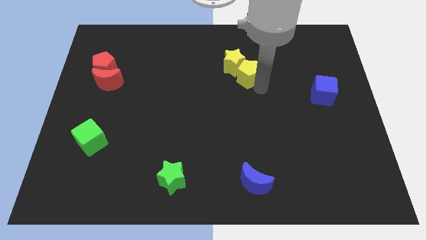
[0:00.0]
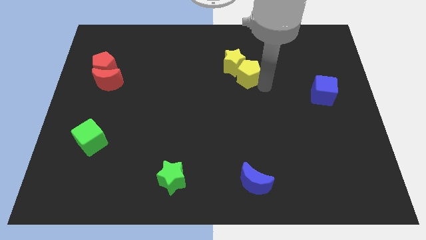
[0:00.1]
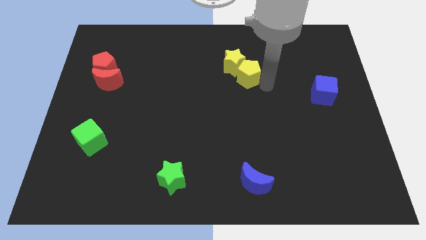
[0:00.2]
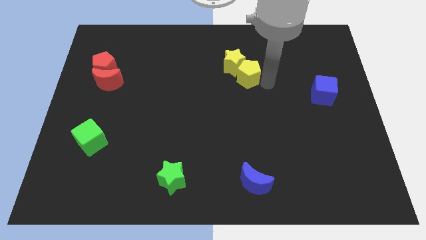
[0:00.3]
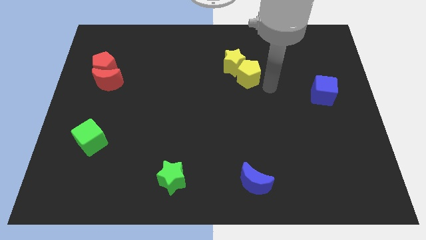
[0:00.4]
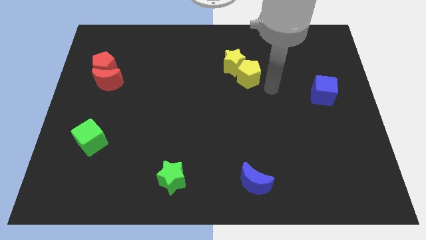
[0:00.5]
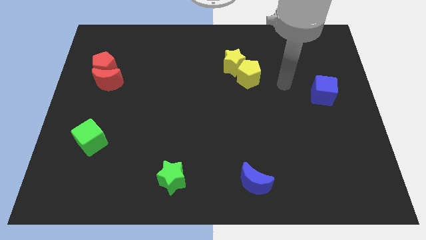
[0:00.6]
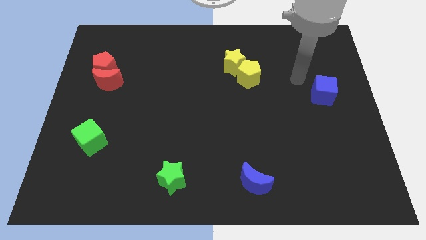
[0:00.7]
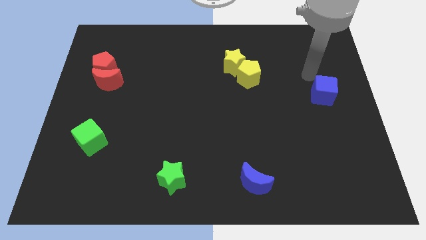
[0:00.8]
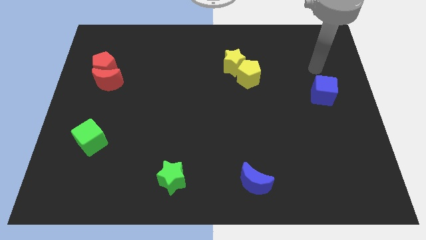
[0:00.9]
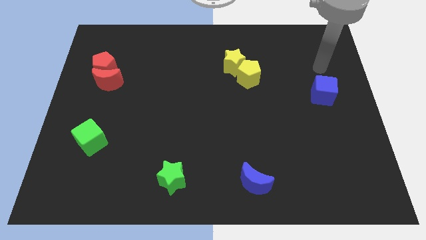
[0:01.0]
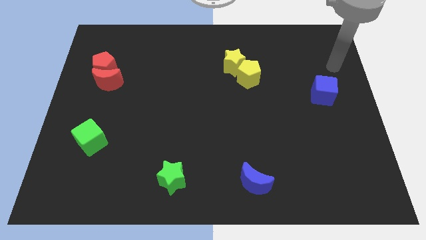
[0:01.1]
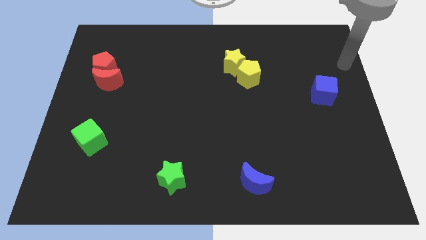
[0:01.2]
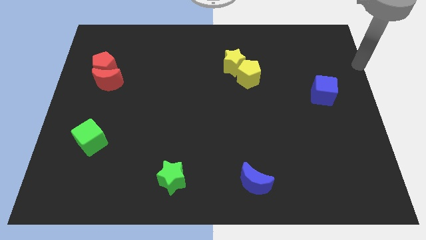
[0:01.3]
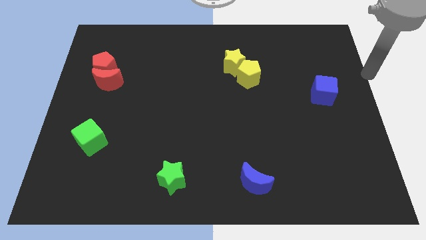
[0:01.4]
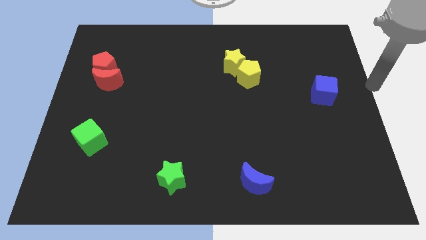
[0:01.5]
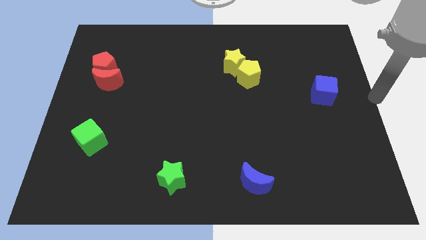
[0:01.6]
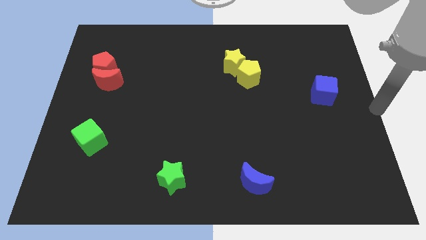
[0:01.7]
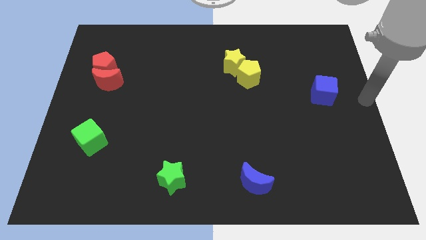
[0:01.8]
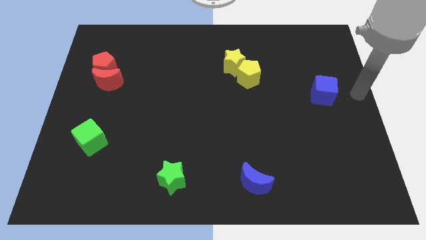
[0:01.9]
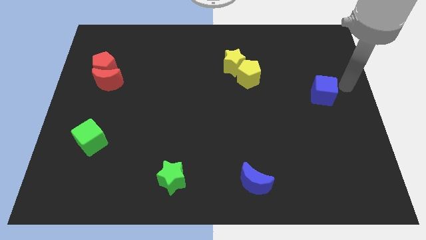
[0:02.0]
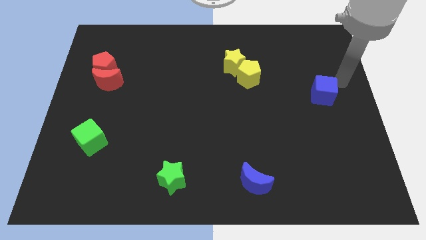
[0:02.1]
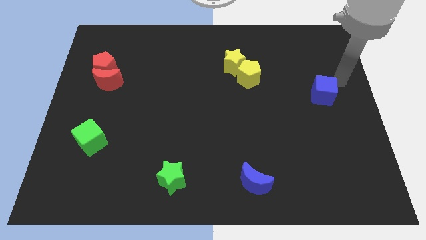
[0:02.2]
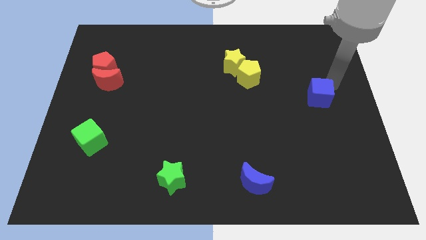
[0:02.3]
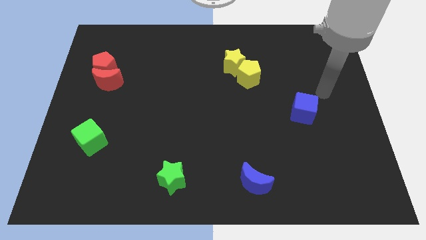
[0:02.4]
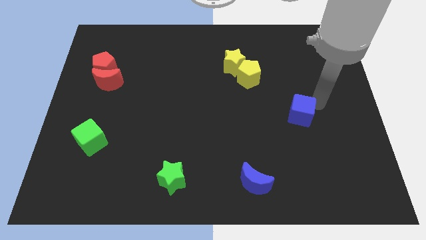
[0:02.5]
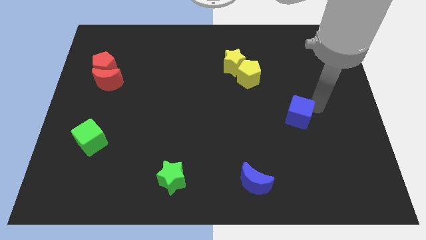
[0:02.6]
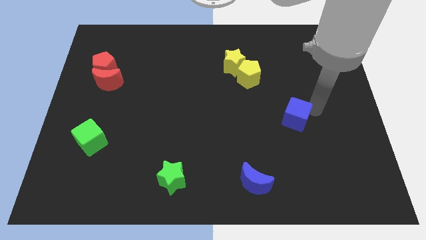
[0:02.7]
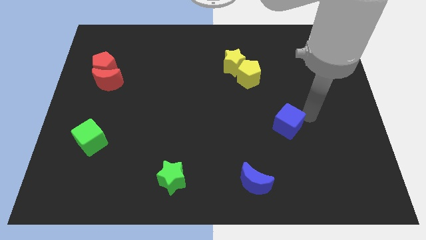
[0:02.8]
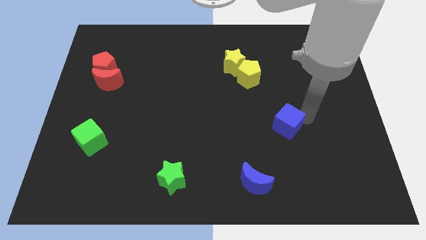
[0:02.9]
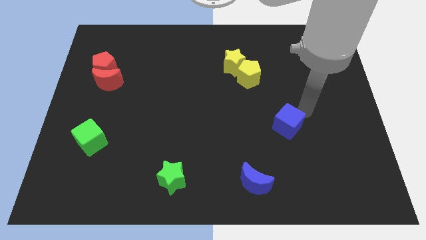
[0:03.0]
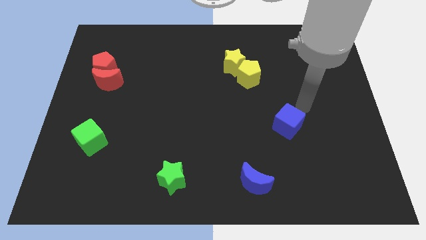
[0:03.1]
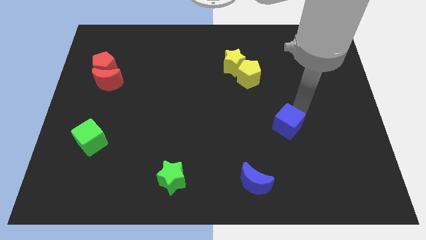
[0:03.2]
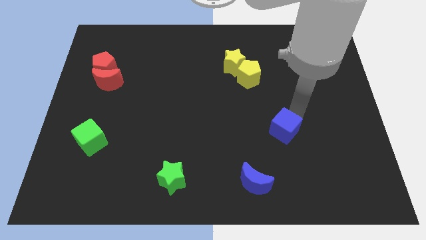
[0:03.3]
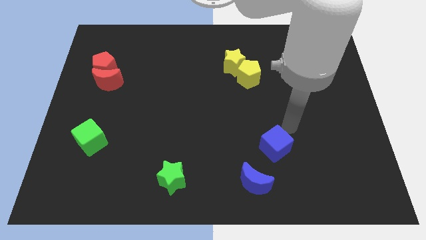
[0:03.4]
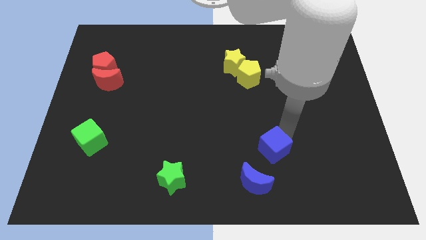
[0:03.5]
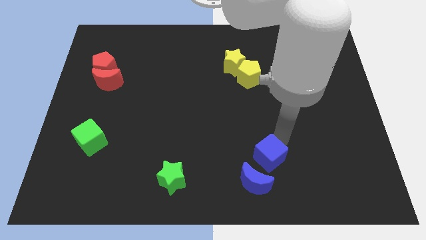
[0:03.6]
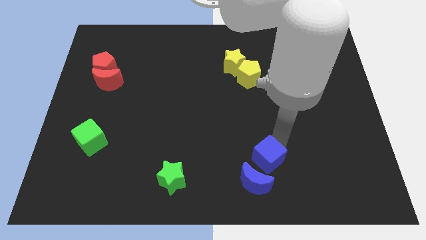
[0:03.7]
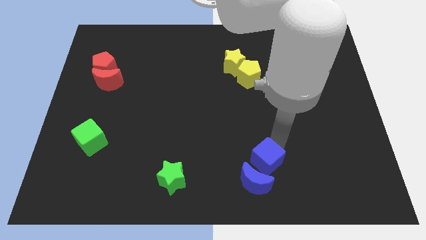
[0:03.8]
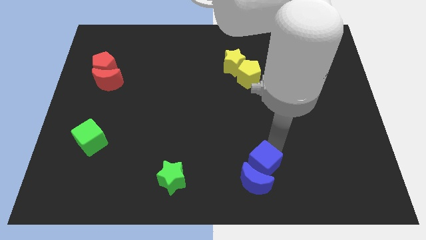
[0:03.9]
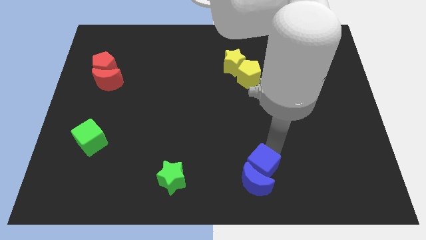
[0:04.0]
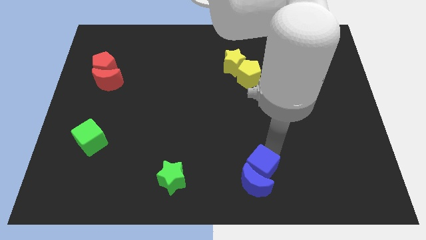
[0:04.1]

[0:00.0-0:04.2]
move the blue into the top side of the blue crescent

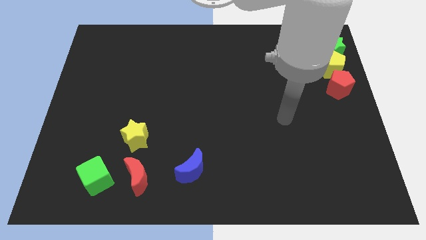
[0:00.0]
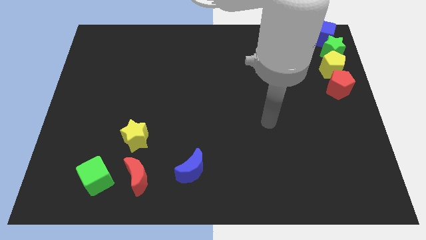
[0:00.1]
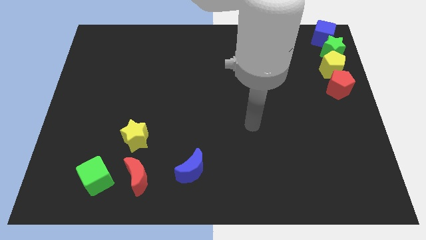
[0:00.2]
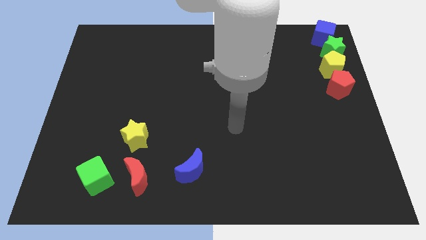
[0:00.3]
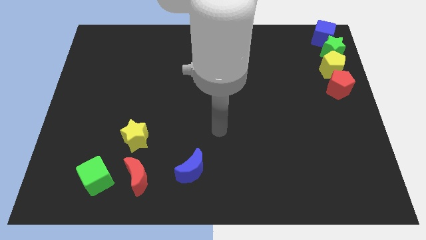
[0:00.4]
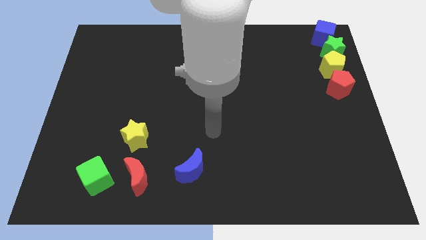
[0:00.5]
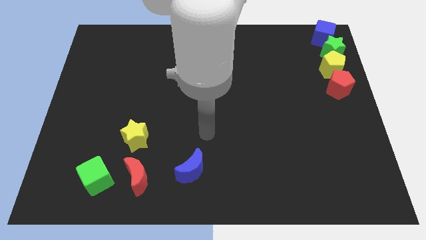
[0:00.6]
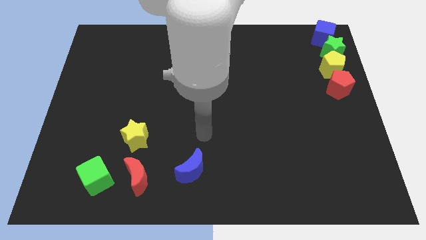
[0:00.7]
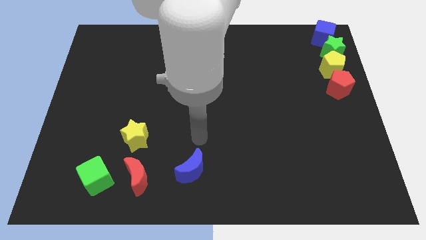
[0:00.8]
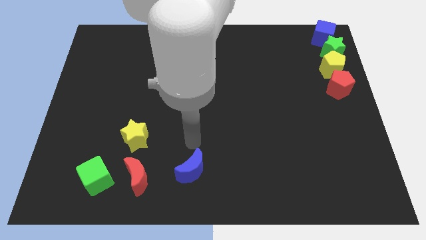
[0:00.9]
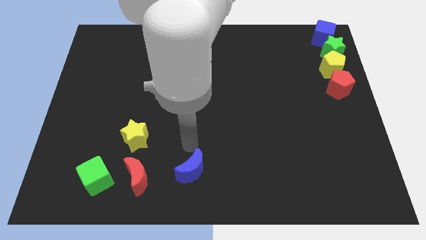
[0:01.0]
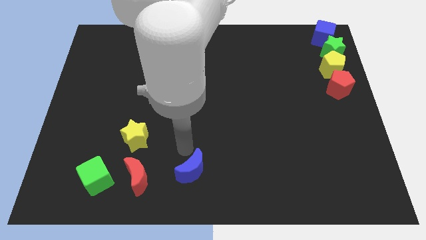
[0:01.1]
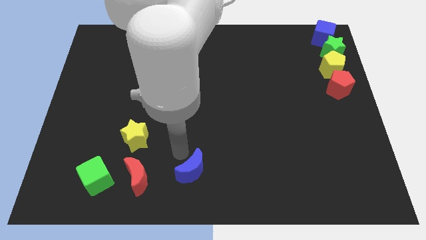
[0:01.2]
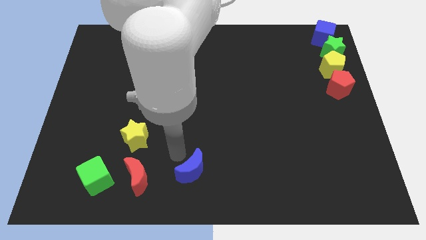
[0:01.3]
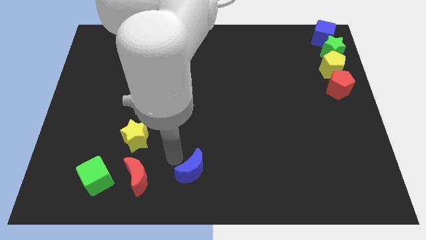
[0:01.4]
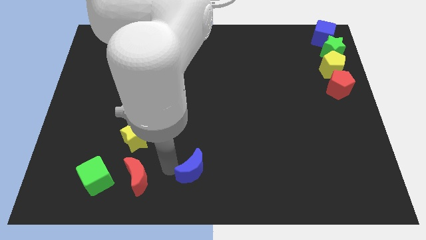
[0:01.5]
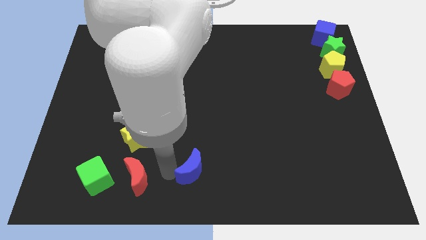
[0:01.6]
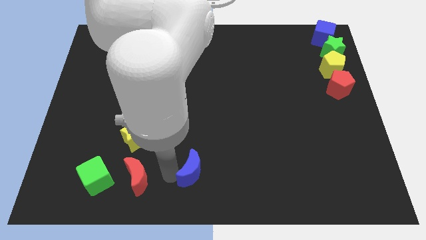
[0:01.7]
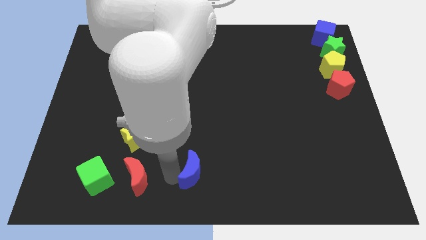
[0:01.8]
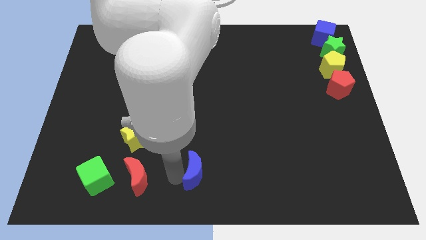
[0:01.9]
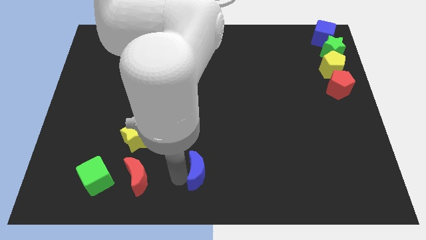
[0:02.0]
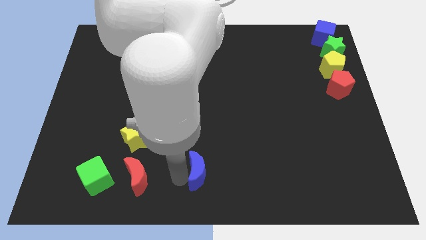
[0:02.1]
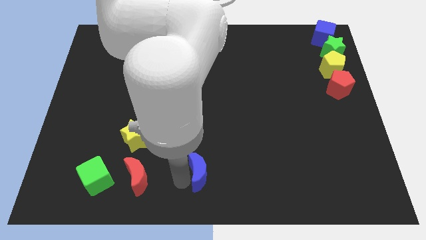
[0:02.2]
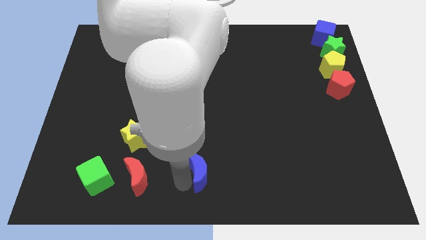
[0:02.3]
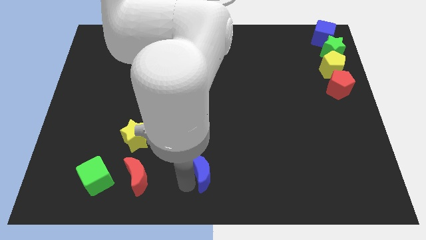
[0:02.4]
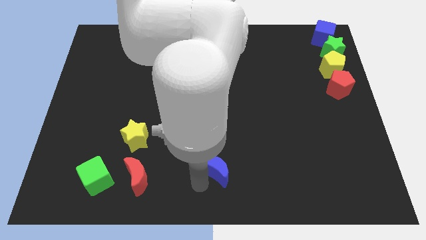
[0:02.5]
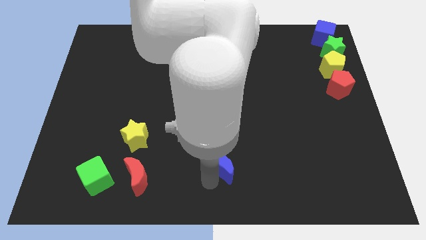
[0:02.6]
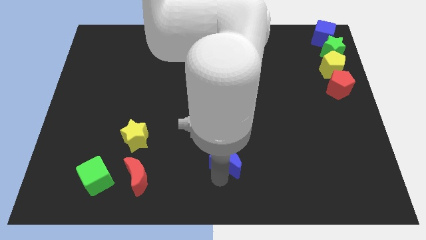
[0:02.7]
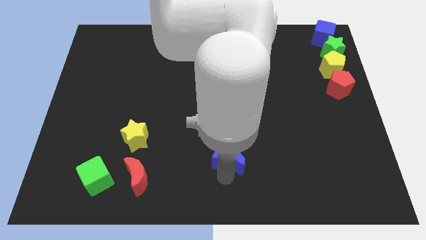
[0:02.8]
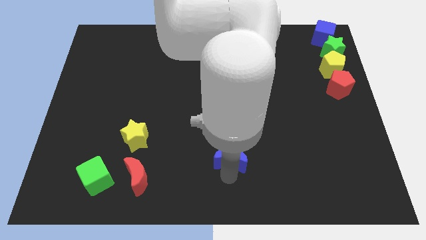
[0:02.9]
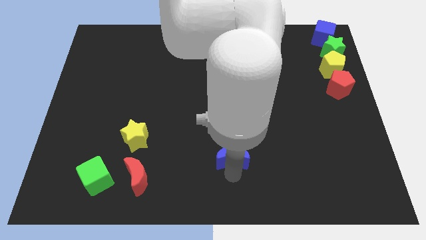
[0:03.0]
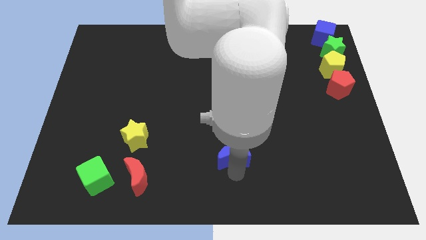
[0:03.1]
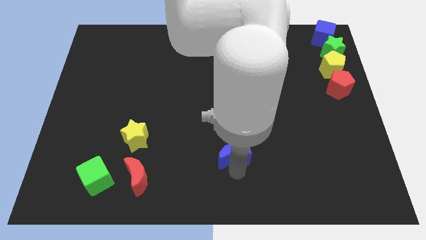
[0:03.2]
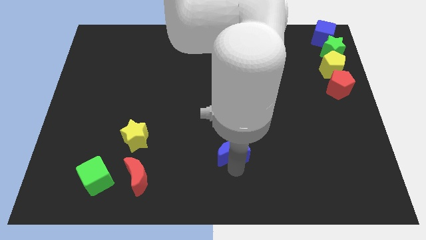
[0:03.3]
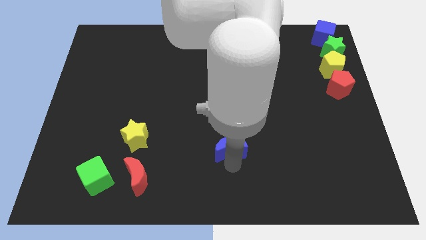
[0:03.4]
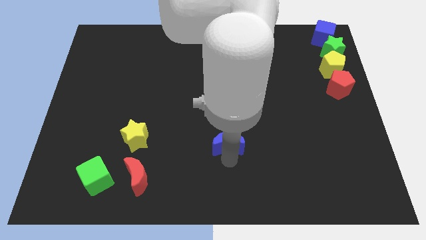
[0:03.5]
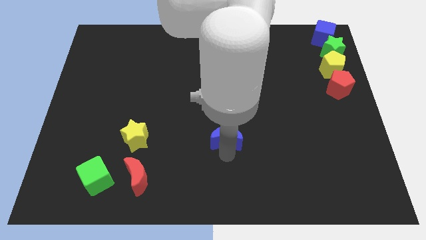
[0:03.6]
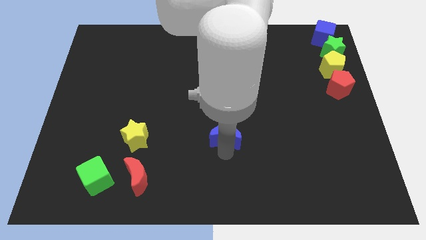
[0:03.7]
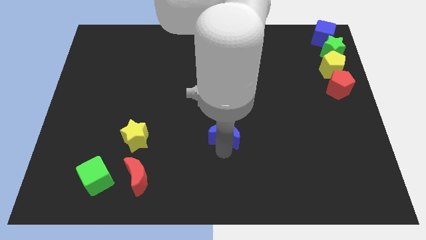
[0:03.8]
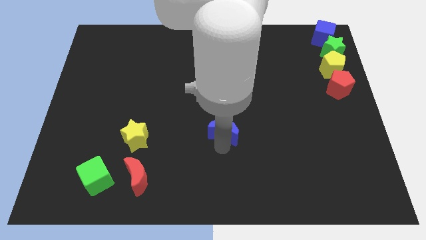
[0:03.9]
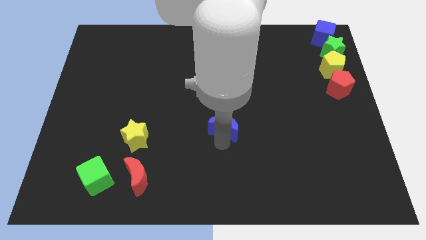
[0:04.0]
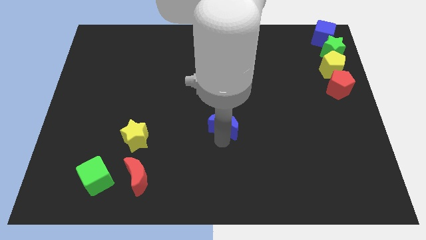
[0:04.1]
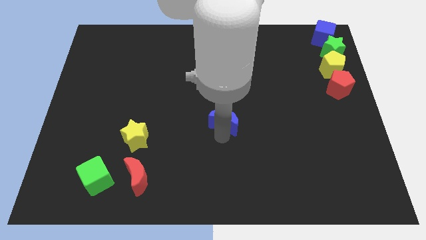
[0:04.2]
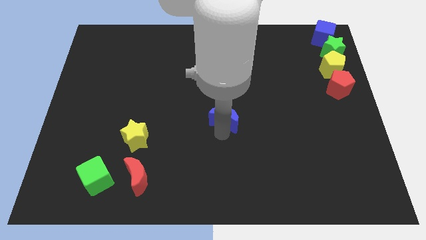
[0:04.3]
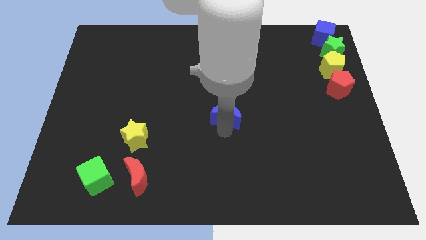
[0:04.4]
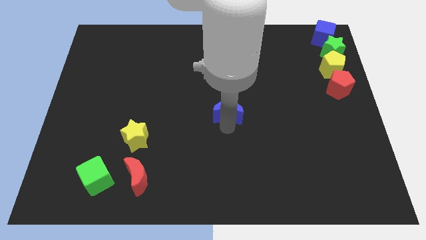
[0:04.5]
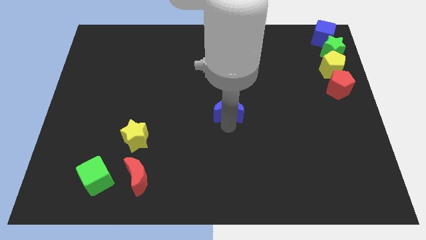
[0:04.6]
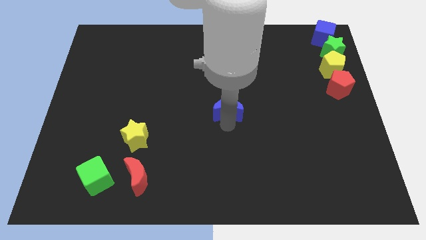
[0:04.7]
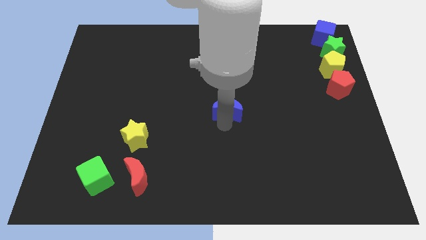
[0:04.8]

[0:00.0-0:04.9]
move the blue crescent to the center of the board
